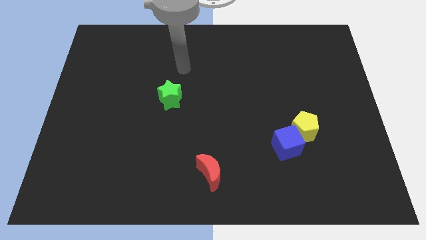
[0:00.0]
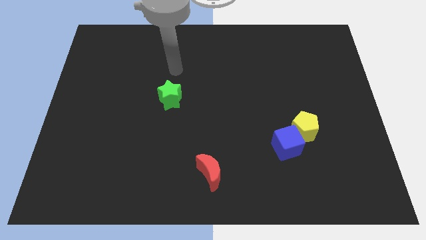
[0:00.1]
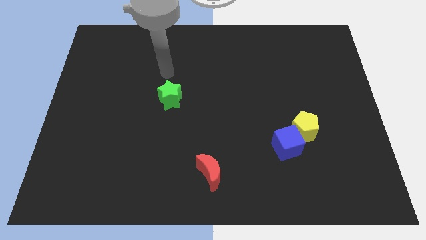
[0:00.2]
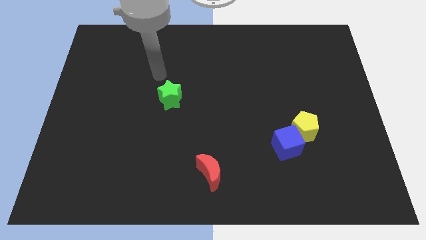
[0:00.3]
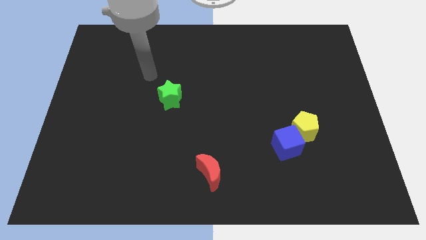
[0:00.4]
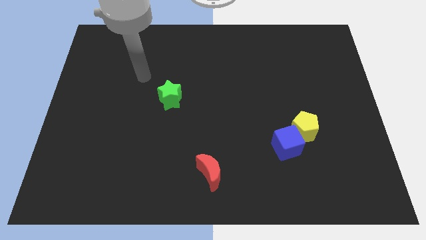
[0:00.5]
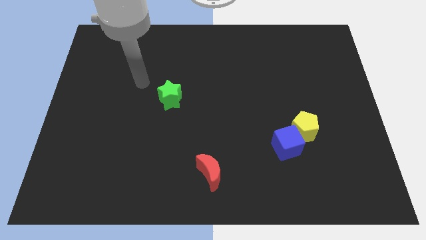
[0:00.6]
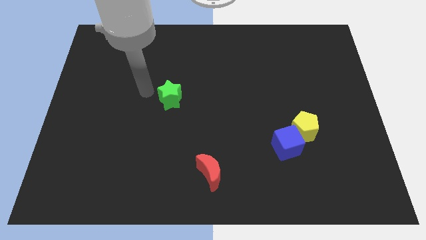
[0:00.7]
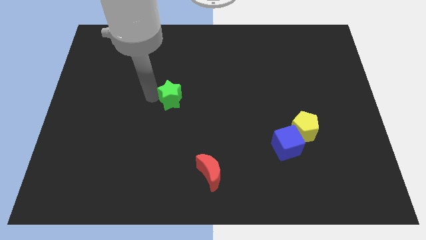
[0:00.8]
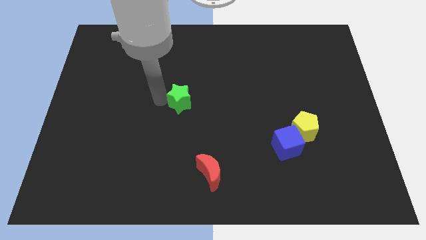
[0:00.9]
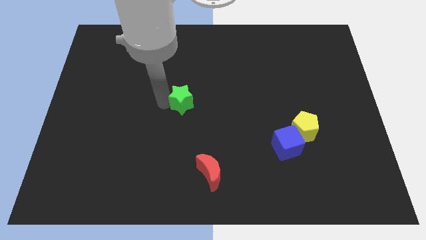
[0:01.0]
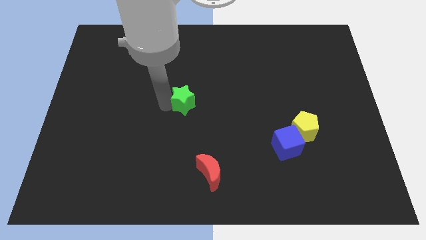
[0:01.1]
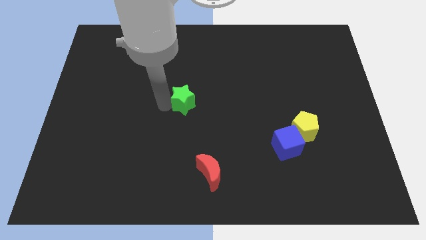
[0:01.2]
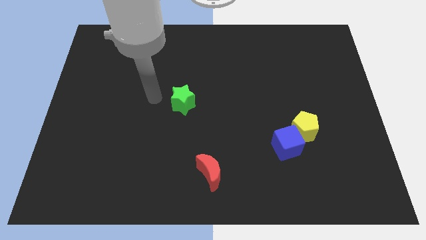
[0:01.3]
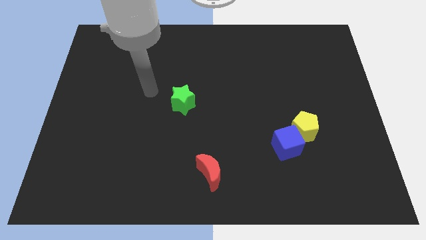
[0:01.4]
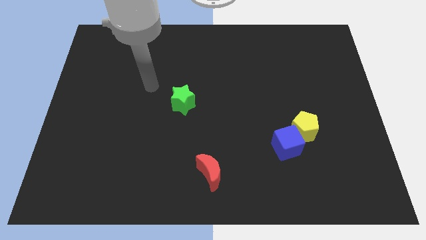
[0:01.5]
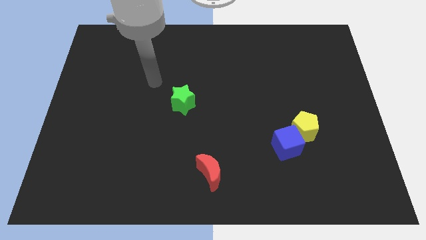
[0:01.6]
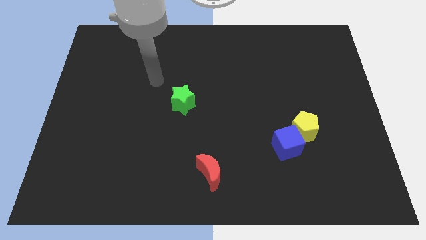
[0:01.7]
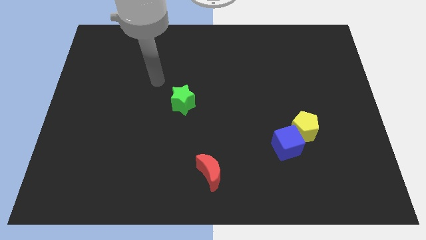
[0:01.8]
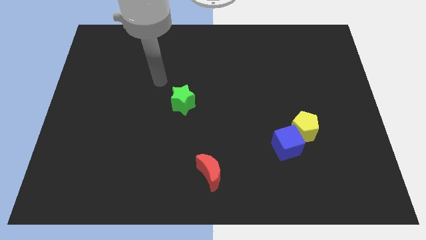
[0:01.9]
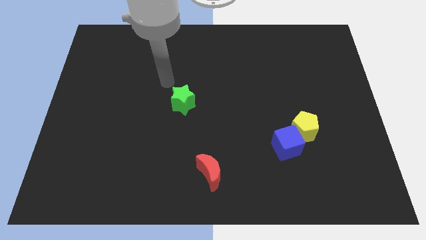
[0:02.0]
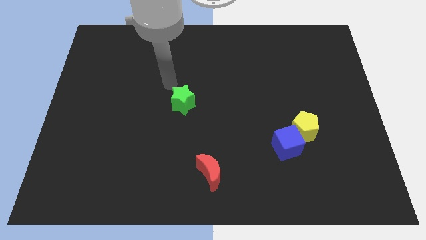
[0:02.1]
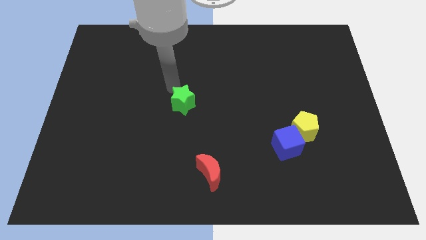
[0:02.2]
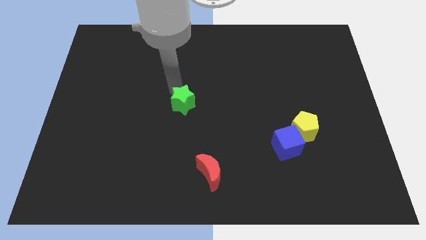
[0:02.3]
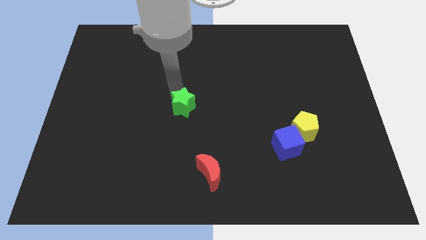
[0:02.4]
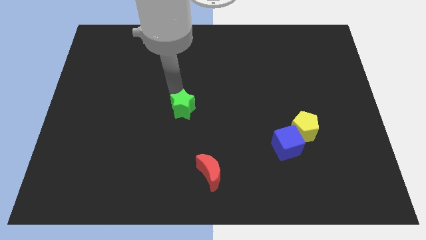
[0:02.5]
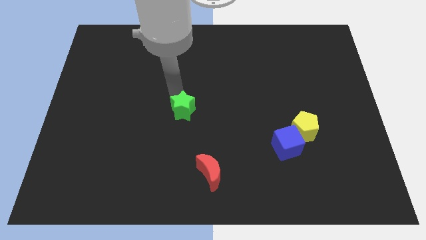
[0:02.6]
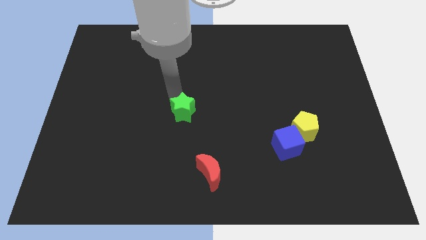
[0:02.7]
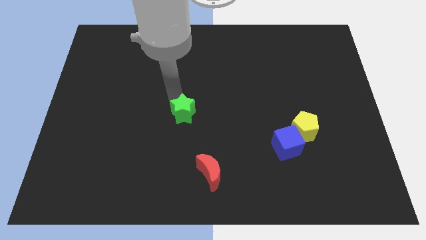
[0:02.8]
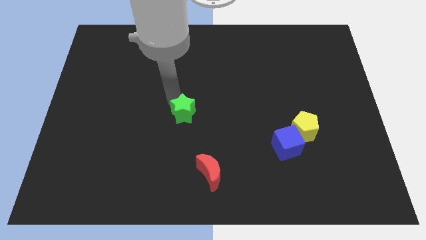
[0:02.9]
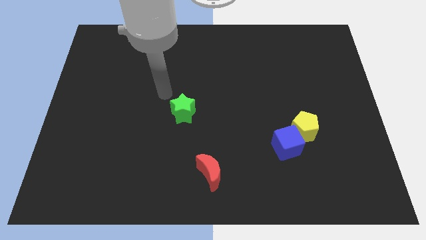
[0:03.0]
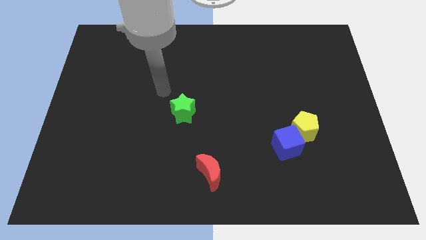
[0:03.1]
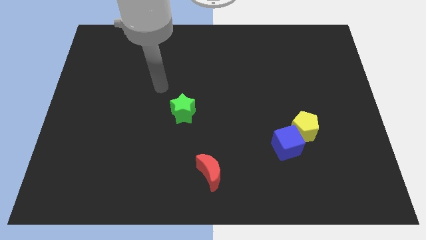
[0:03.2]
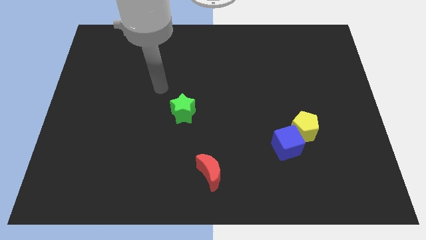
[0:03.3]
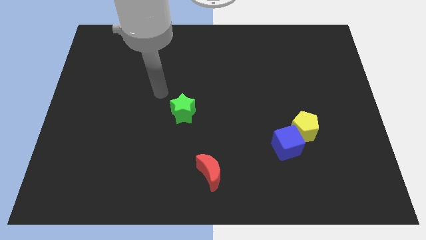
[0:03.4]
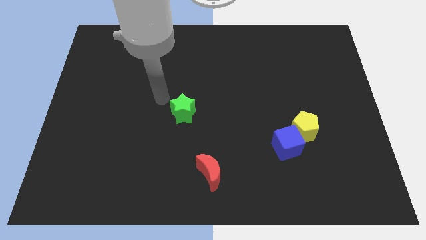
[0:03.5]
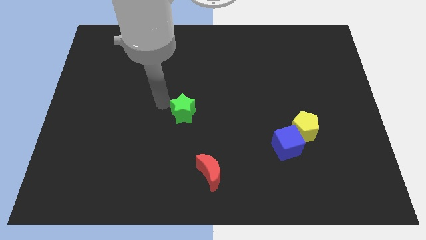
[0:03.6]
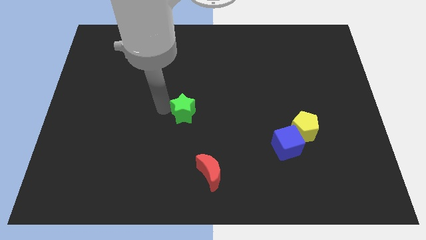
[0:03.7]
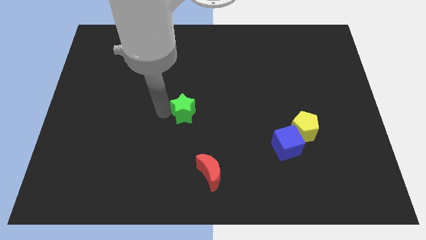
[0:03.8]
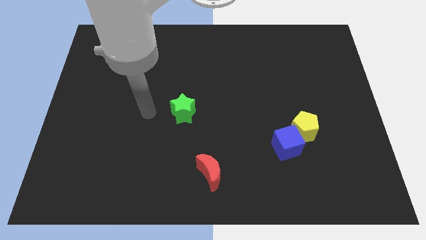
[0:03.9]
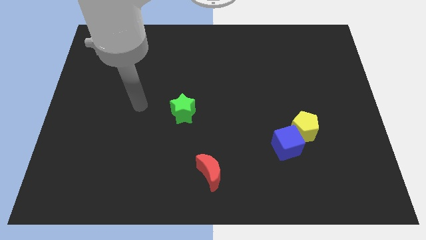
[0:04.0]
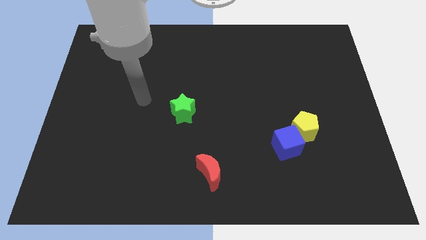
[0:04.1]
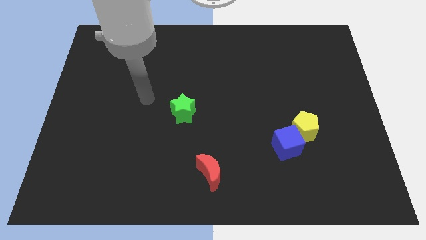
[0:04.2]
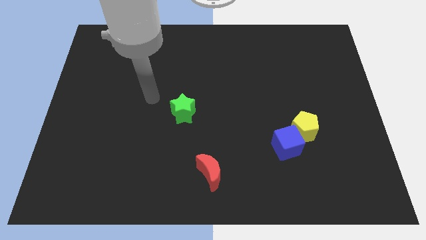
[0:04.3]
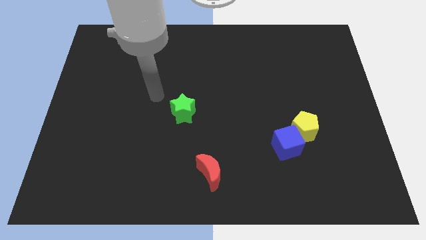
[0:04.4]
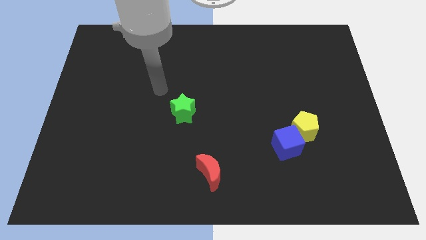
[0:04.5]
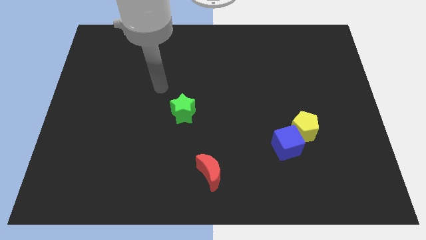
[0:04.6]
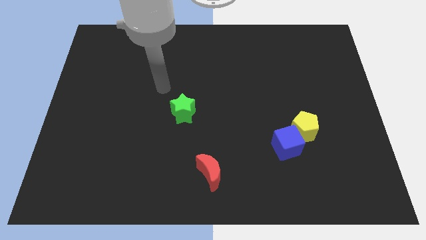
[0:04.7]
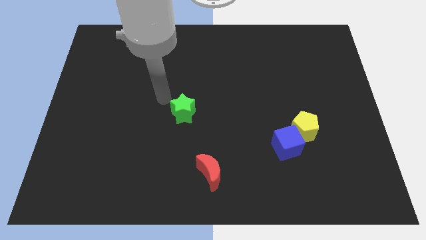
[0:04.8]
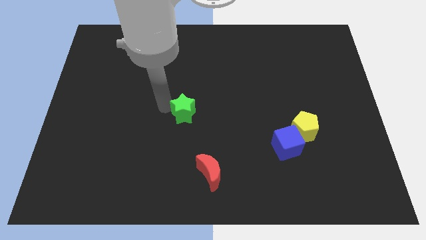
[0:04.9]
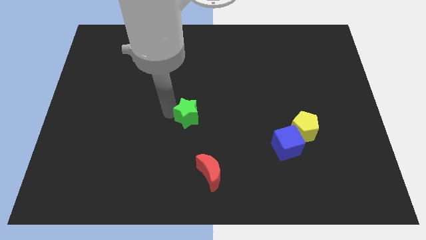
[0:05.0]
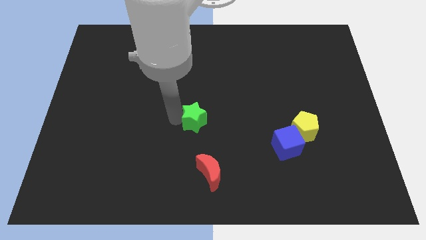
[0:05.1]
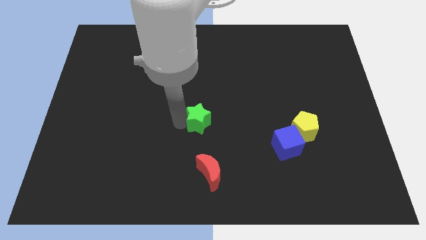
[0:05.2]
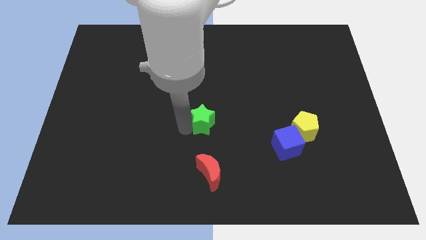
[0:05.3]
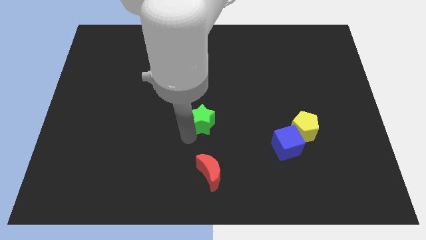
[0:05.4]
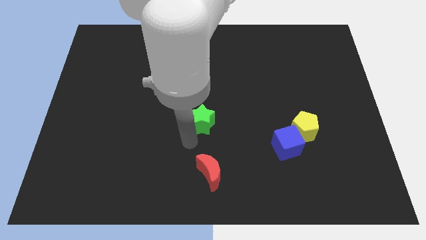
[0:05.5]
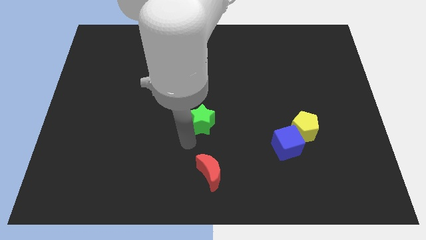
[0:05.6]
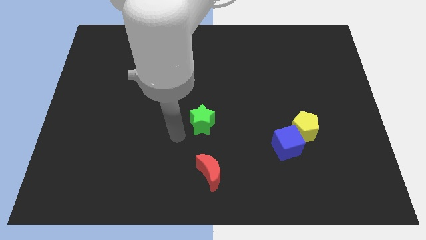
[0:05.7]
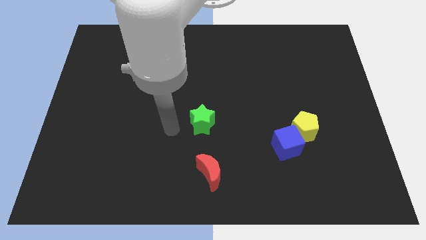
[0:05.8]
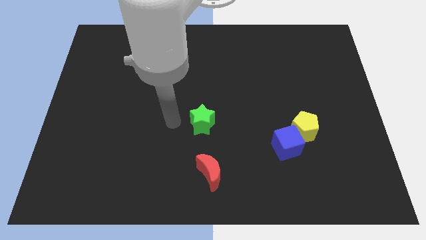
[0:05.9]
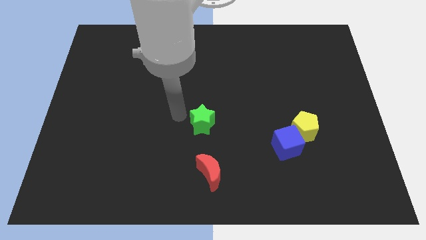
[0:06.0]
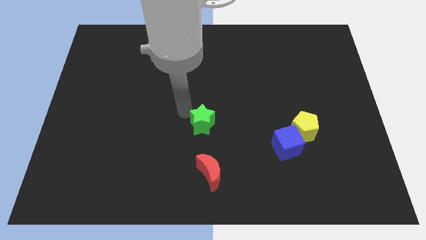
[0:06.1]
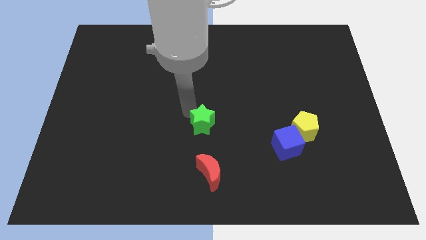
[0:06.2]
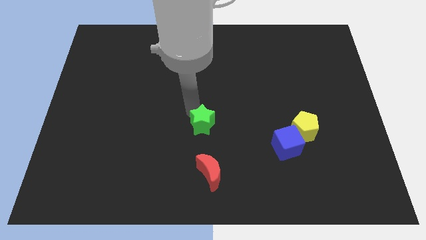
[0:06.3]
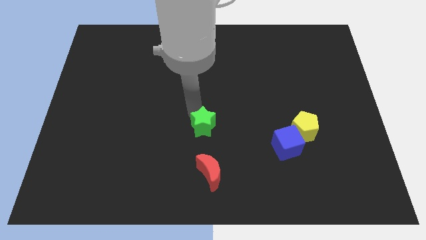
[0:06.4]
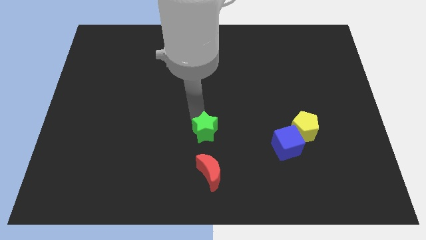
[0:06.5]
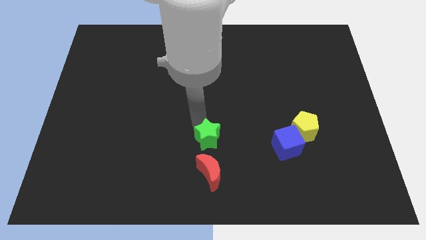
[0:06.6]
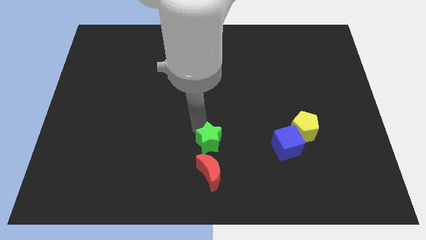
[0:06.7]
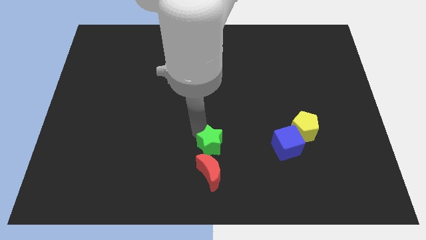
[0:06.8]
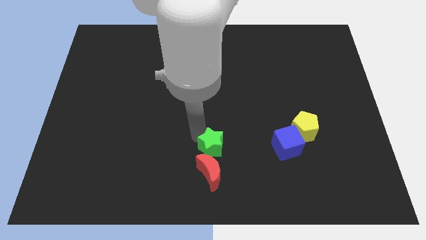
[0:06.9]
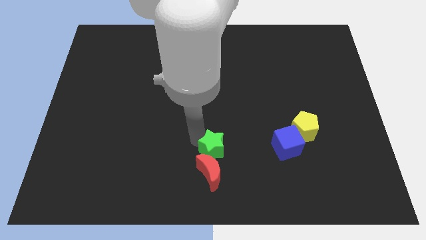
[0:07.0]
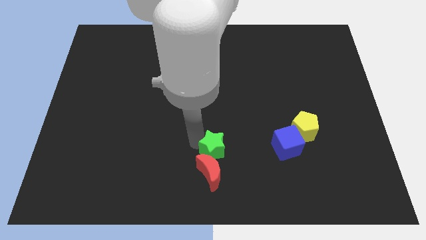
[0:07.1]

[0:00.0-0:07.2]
push the green star to the red block

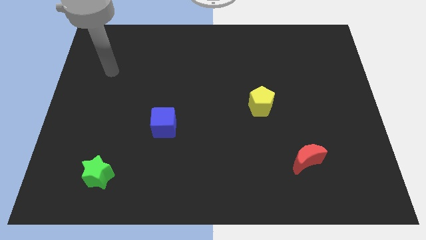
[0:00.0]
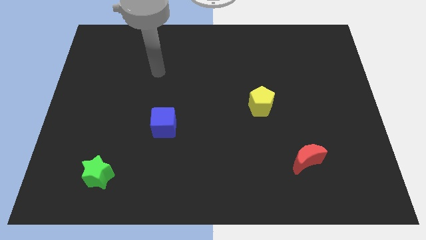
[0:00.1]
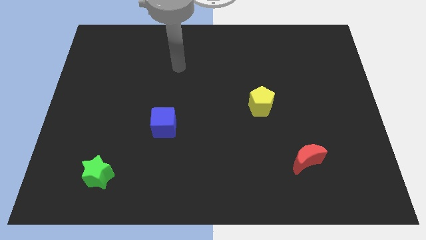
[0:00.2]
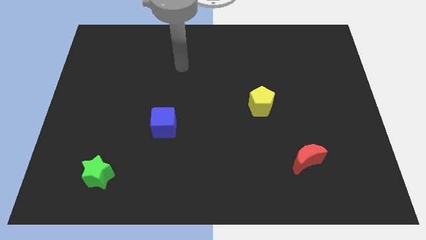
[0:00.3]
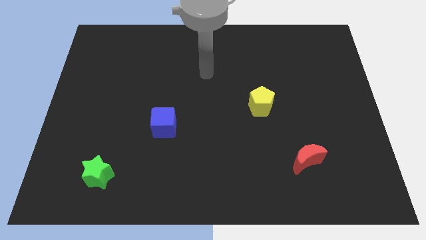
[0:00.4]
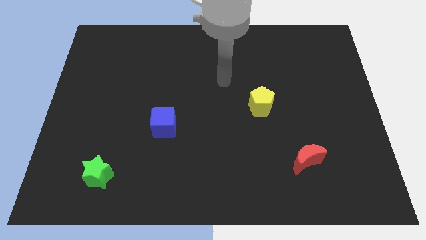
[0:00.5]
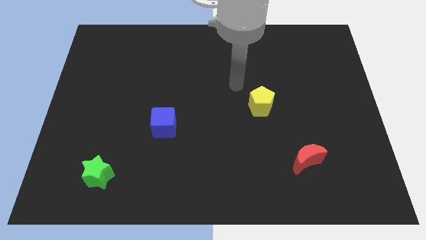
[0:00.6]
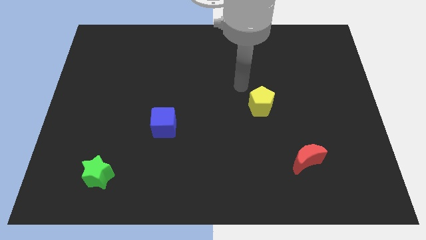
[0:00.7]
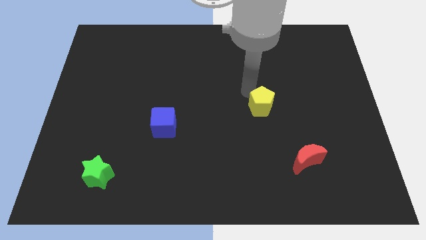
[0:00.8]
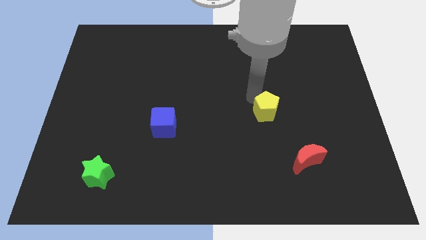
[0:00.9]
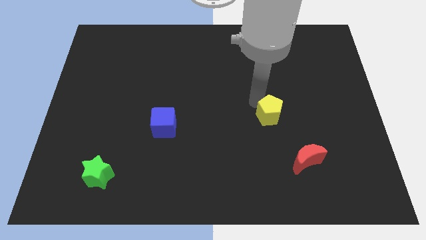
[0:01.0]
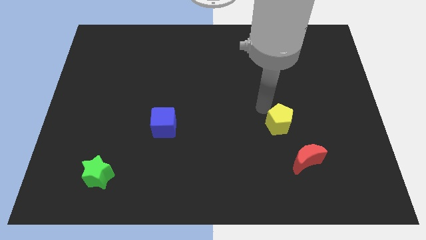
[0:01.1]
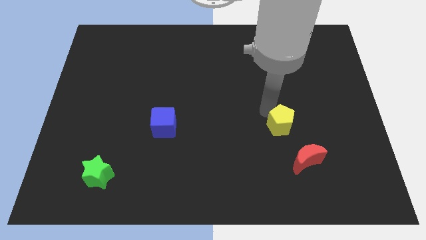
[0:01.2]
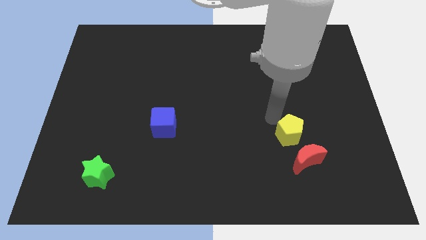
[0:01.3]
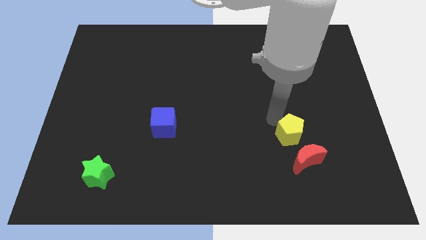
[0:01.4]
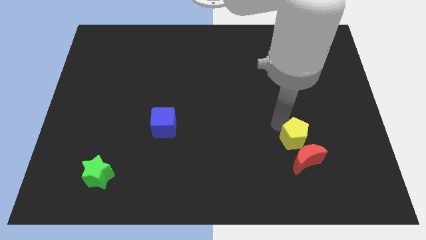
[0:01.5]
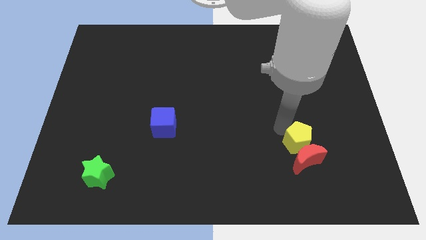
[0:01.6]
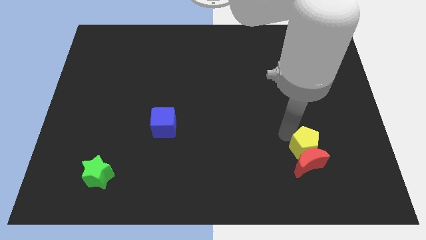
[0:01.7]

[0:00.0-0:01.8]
put the yellow block towards the moon
